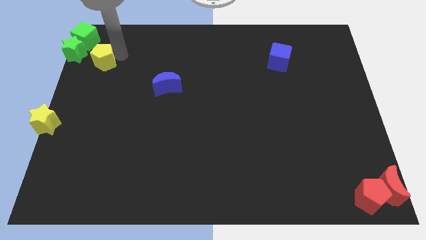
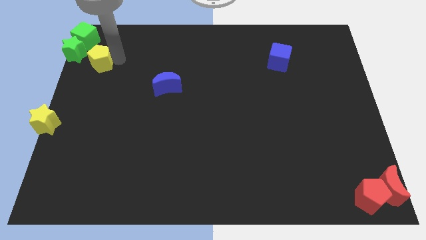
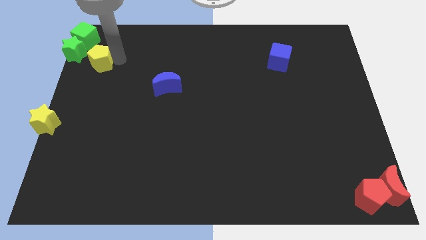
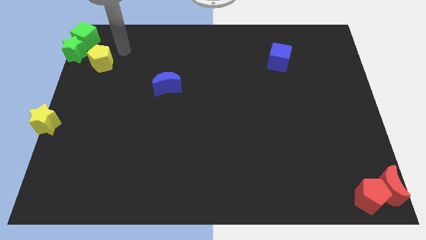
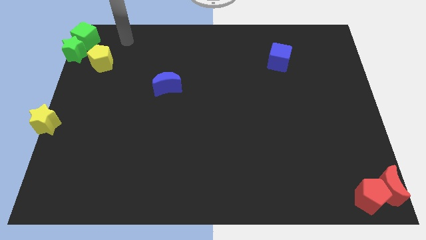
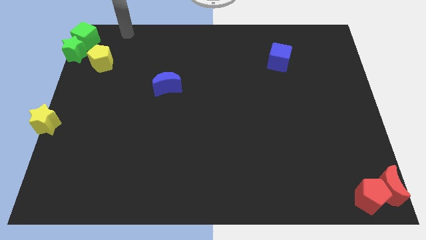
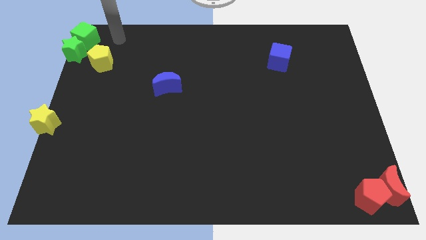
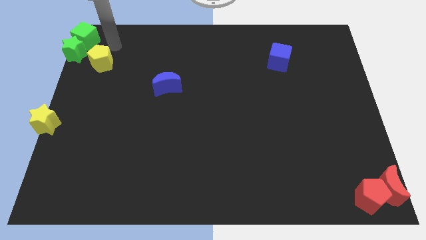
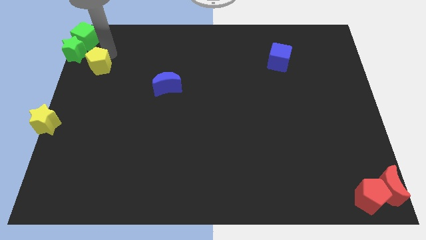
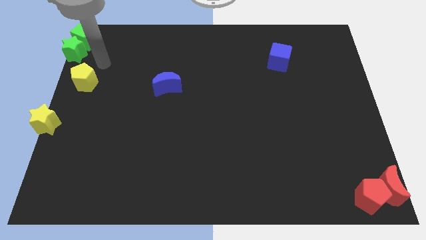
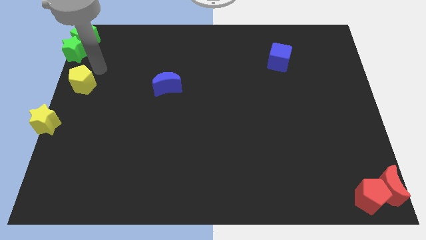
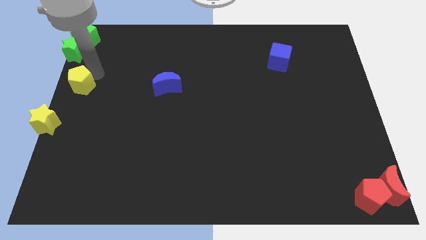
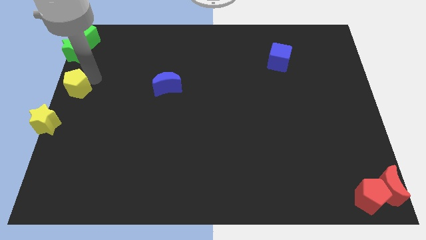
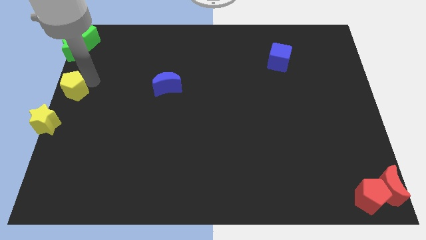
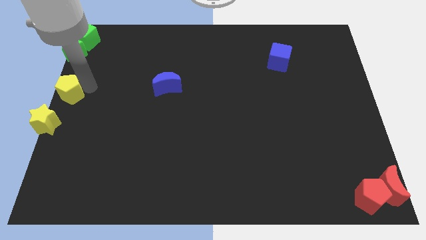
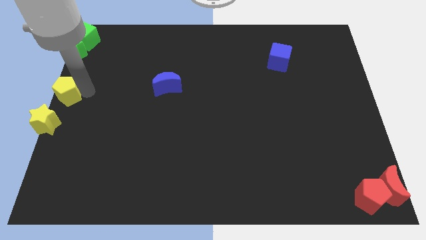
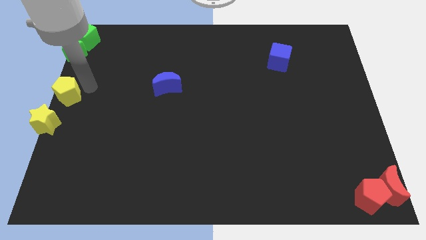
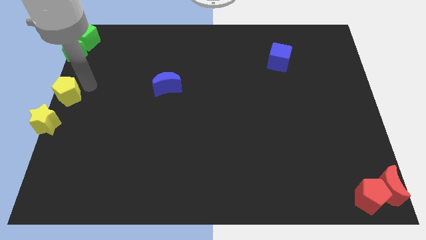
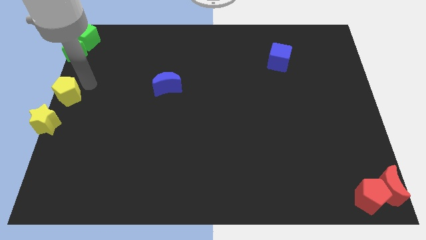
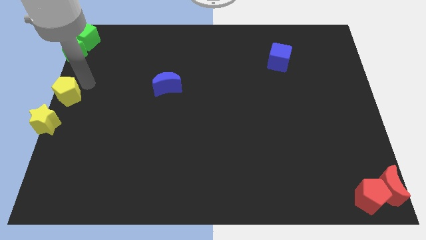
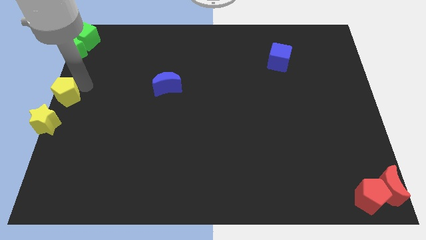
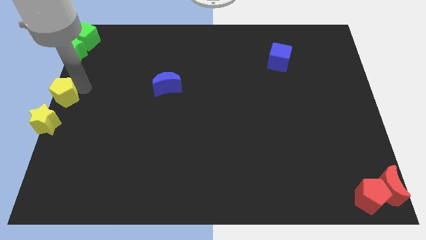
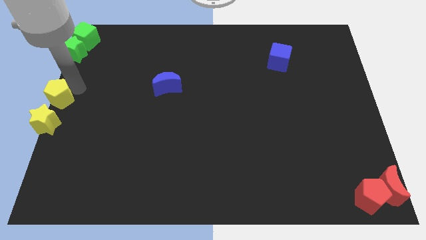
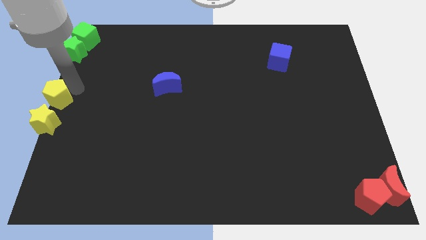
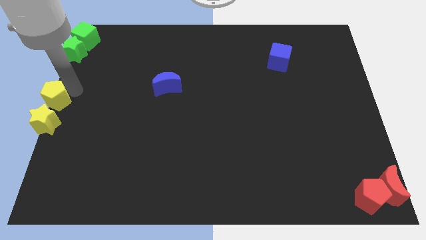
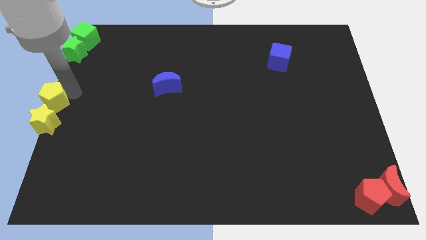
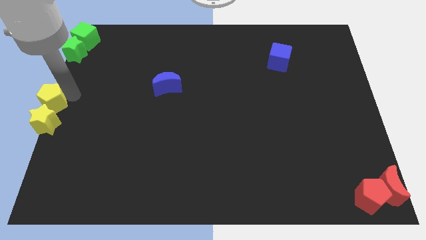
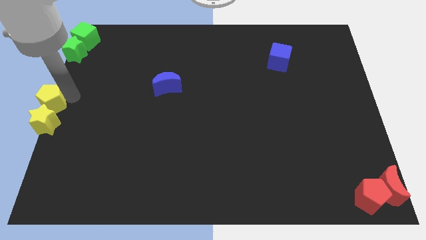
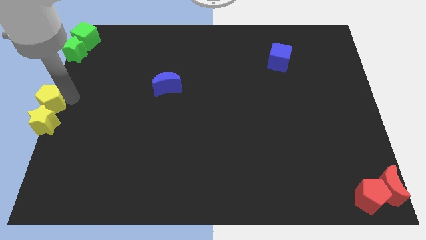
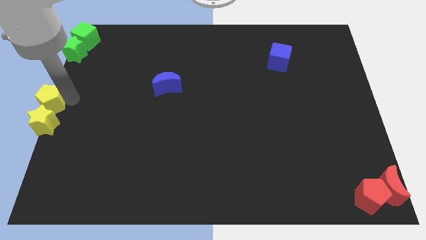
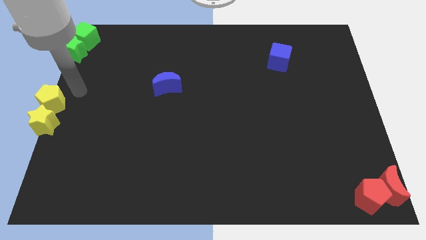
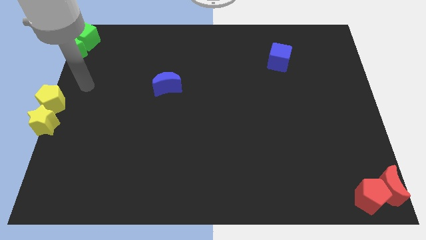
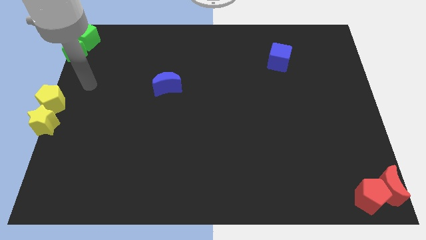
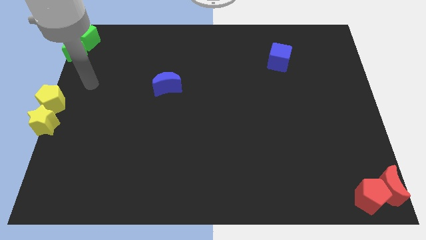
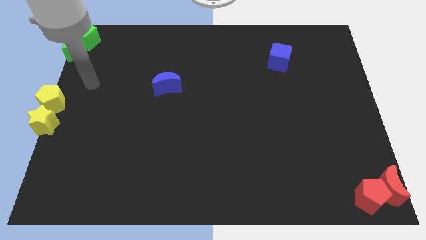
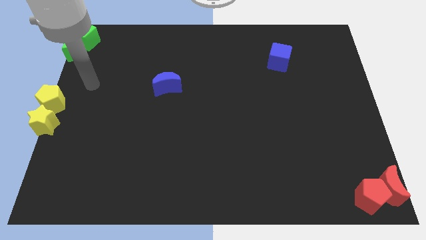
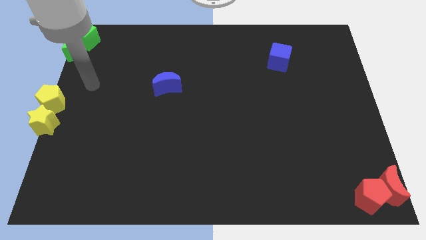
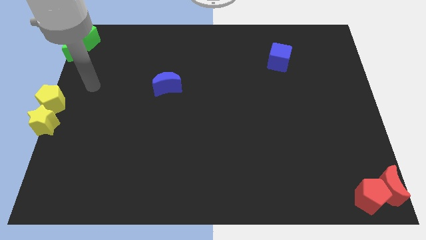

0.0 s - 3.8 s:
push the yellow pentagon into the top of the yellow star

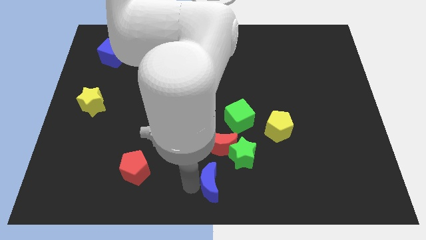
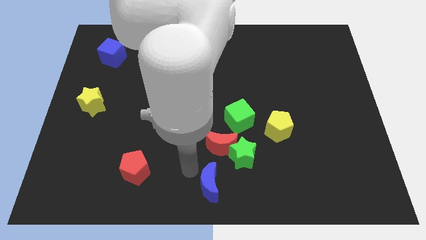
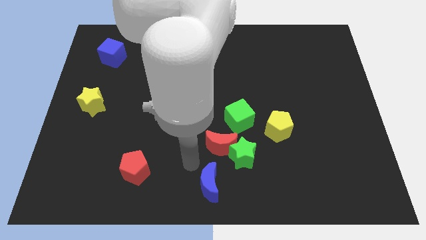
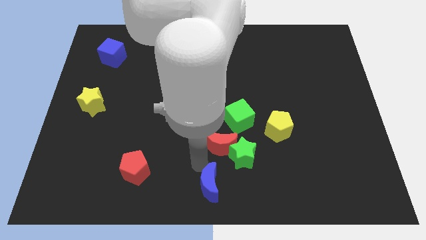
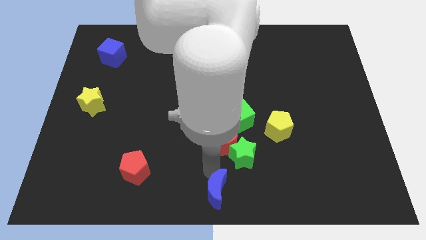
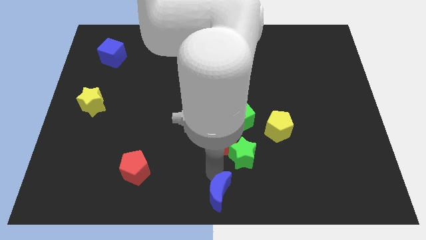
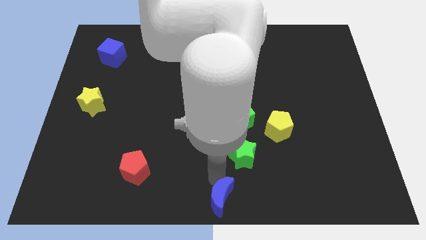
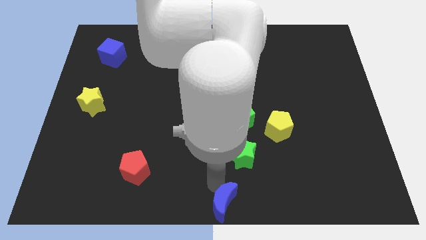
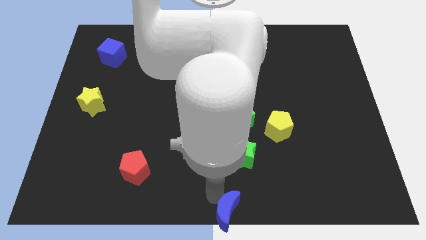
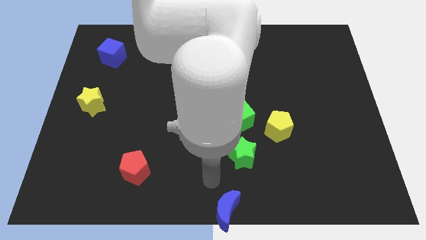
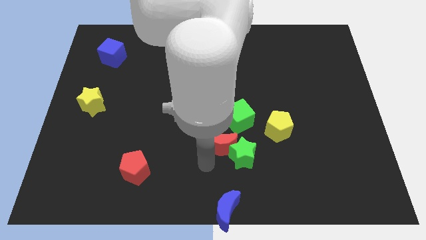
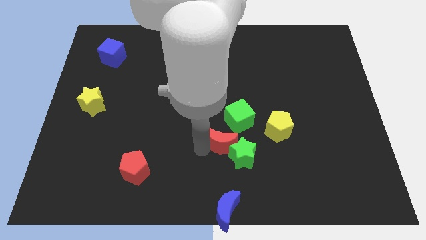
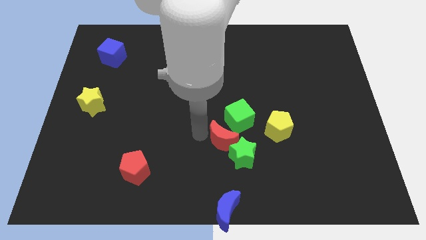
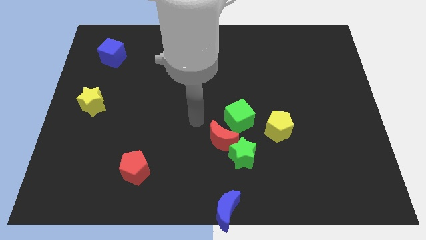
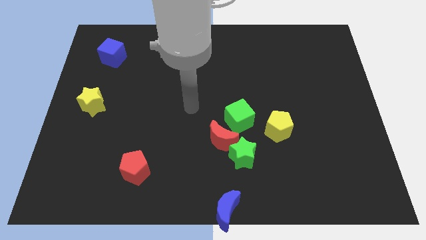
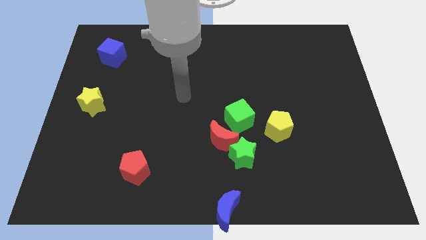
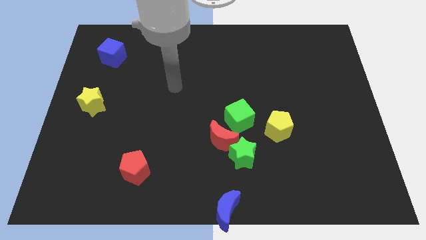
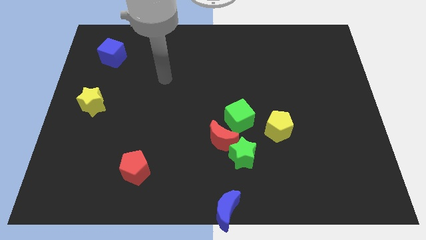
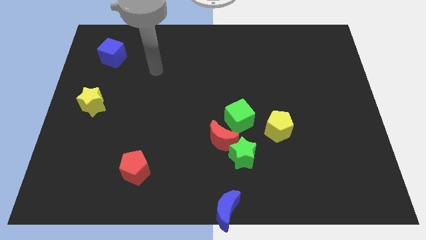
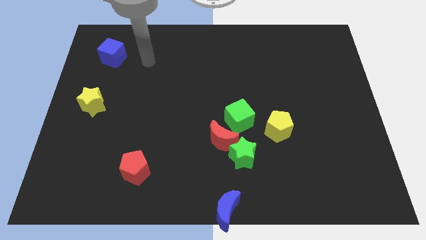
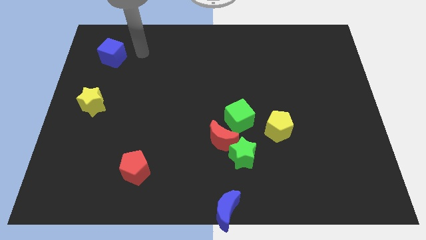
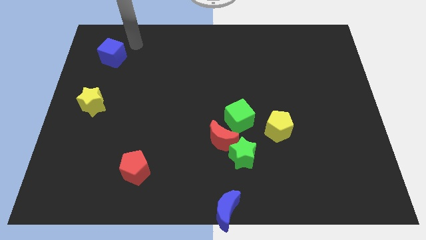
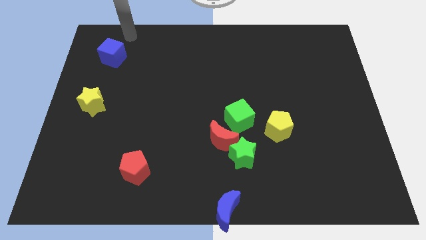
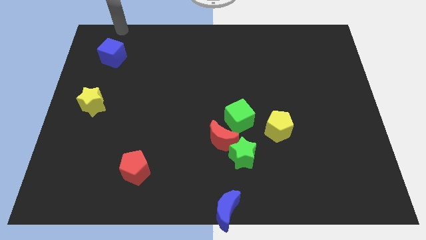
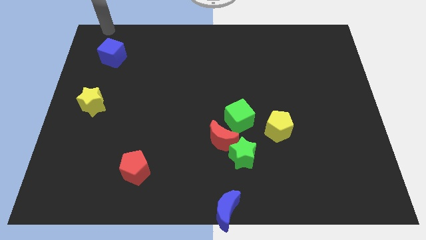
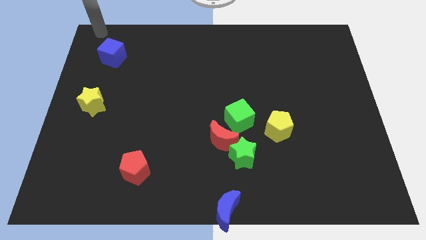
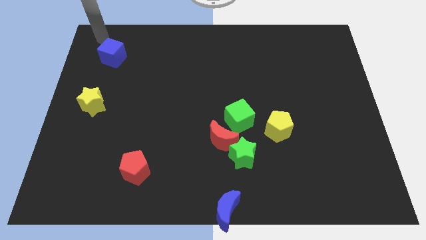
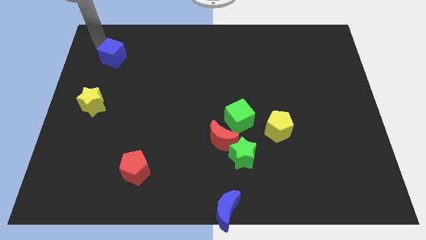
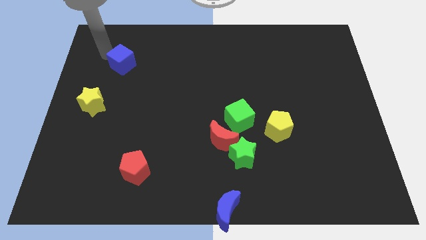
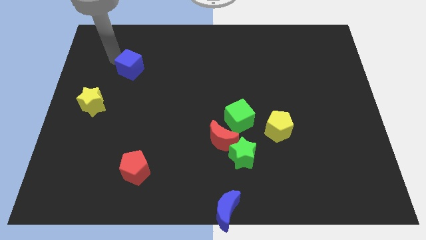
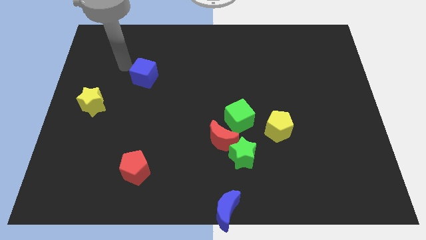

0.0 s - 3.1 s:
place the blue moon at the bottom center of the board

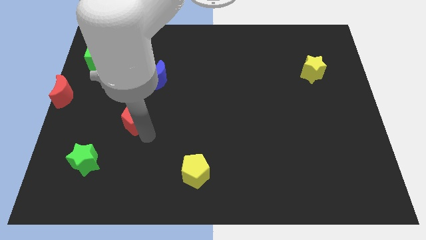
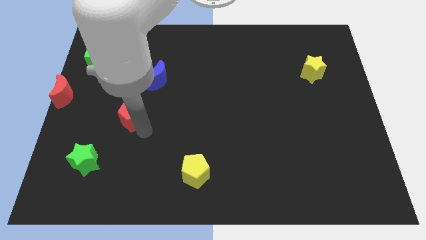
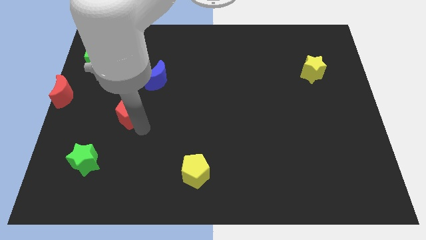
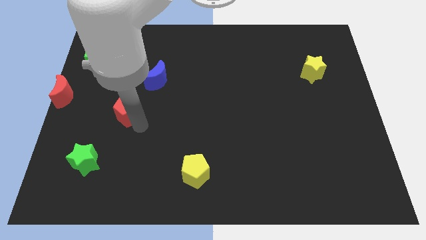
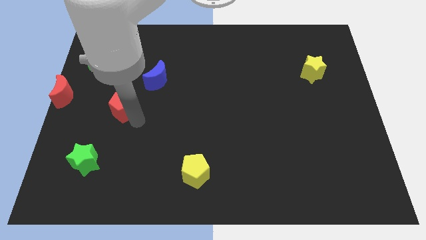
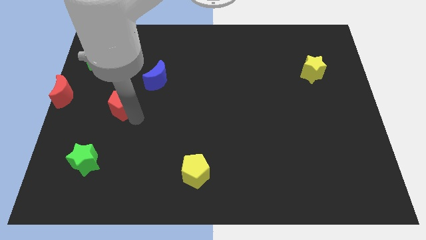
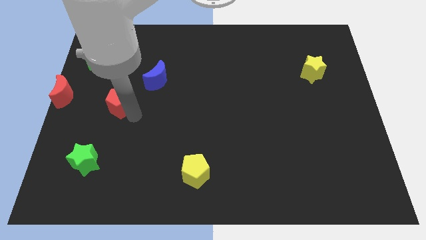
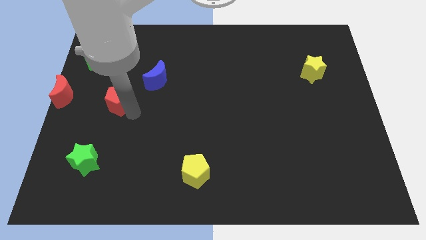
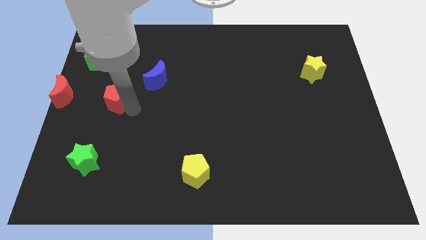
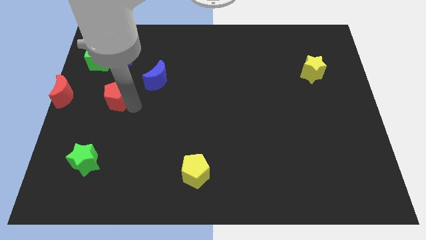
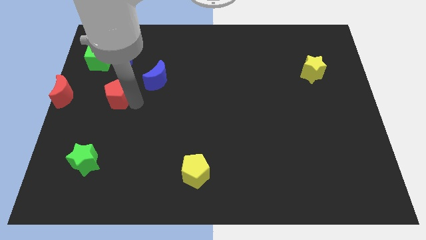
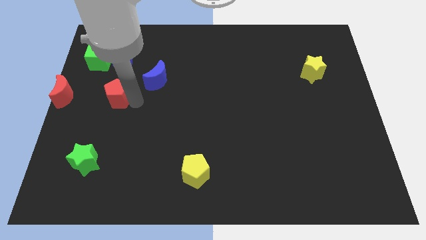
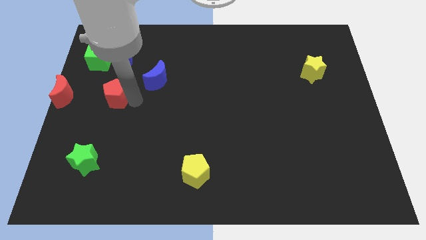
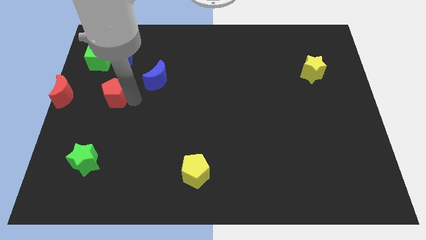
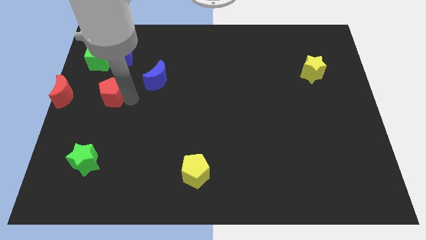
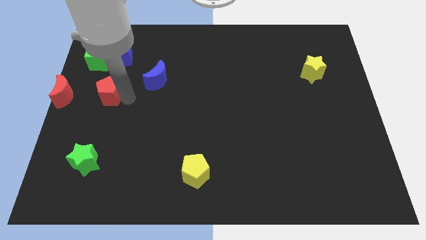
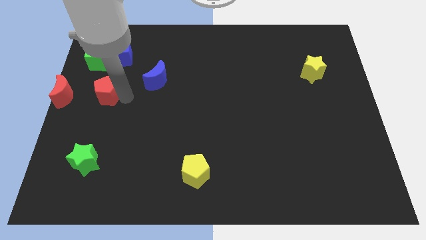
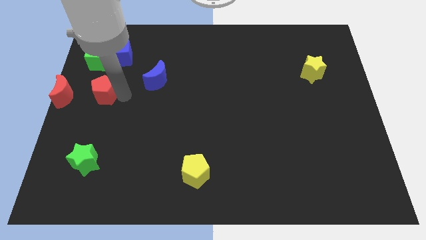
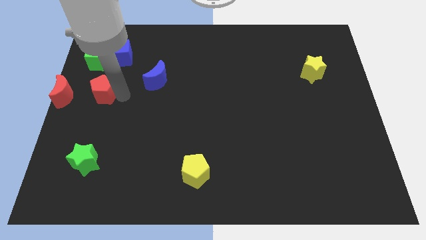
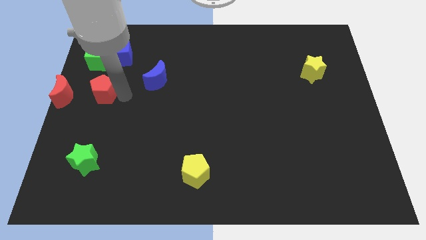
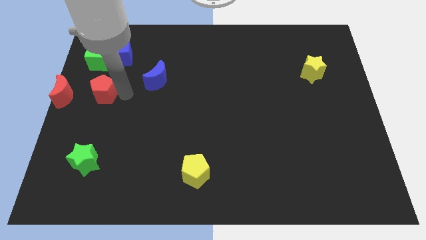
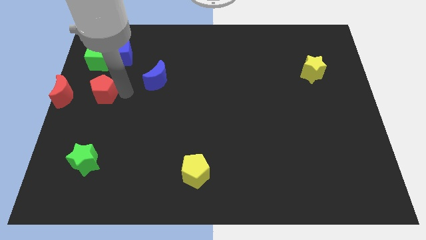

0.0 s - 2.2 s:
place the red pentagon in between the red moon and blue moon

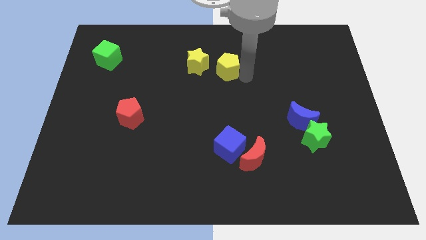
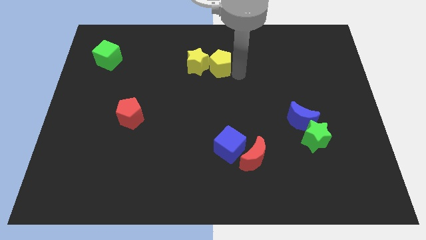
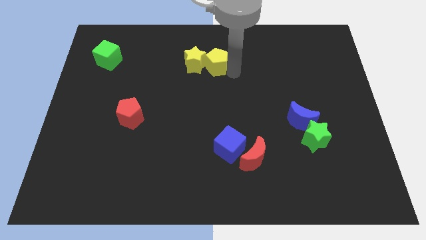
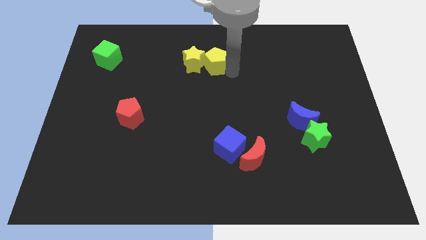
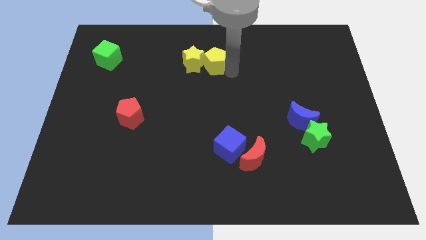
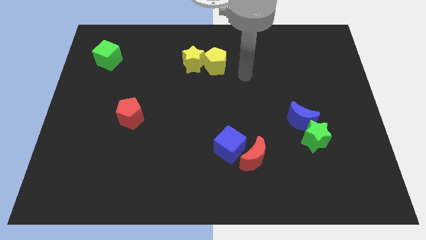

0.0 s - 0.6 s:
push yellow pentagon in to yellow star
